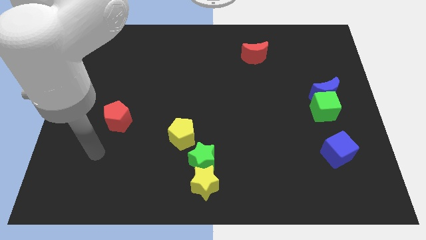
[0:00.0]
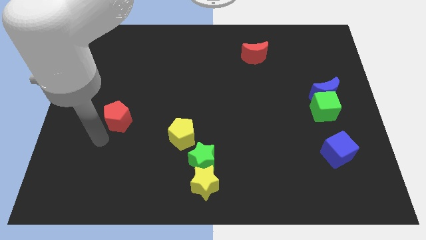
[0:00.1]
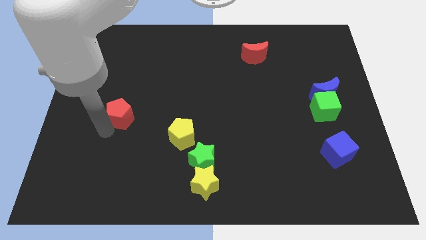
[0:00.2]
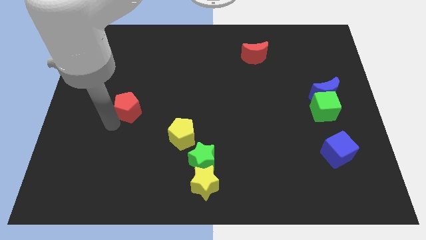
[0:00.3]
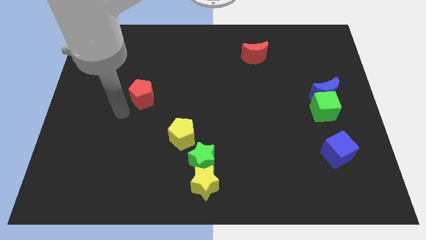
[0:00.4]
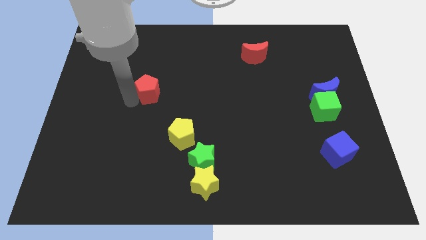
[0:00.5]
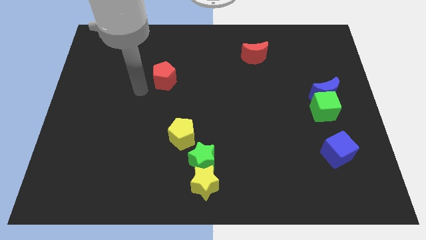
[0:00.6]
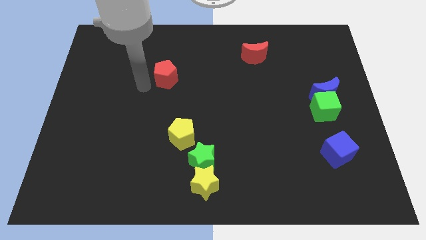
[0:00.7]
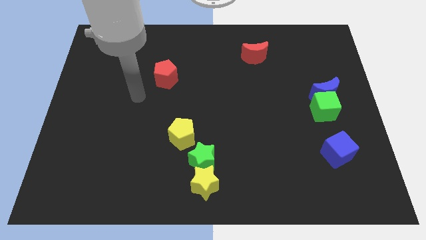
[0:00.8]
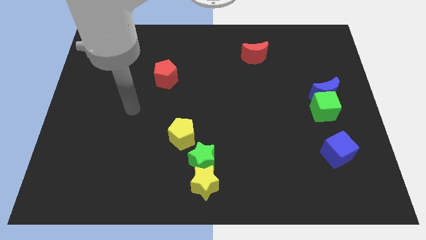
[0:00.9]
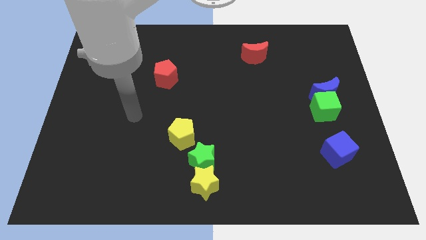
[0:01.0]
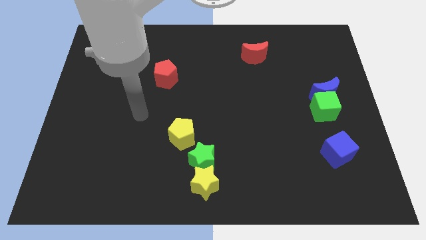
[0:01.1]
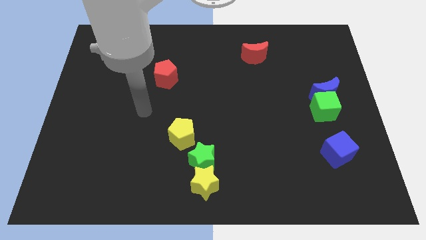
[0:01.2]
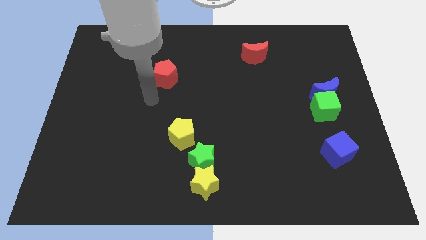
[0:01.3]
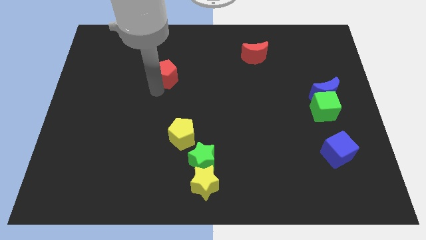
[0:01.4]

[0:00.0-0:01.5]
slide the red pentagon diagonally on the top left side of the yellow pentagon

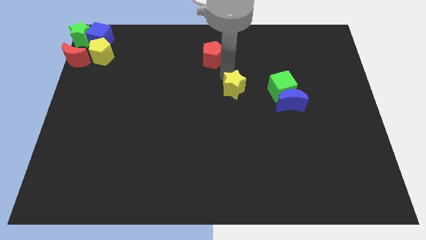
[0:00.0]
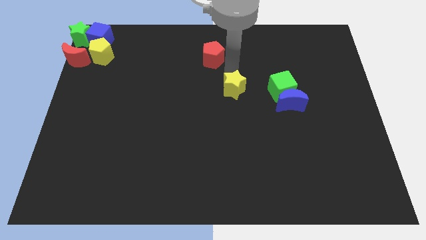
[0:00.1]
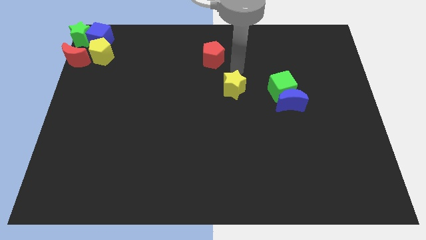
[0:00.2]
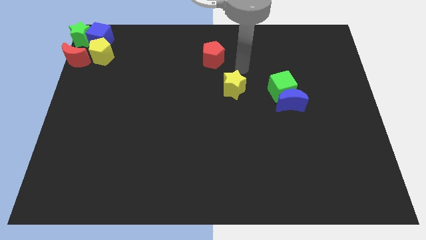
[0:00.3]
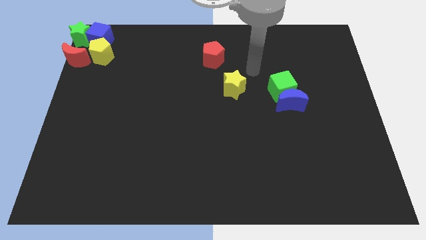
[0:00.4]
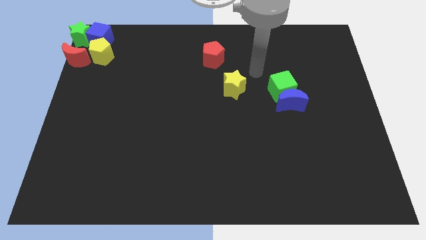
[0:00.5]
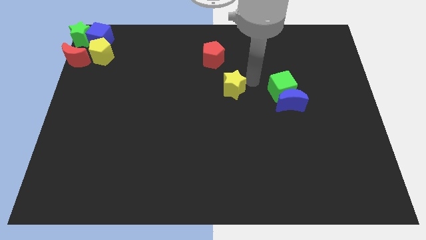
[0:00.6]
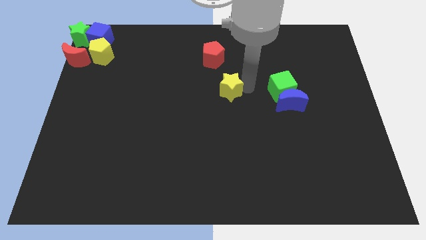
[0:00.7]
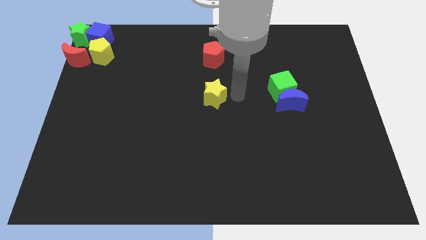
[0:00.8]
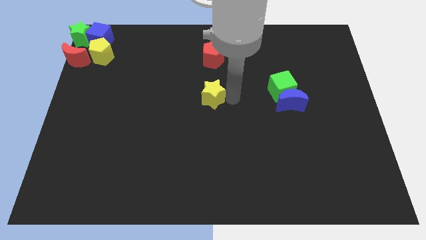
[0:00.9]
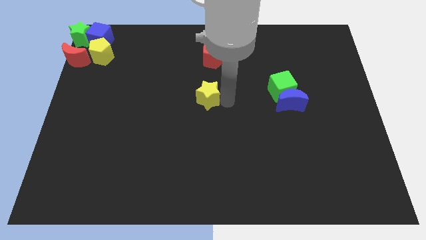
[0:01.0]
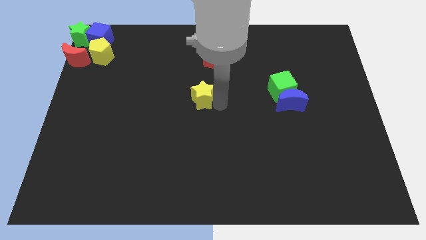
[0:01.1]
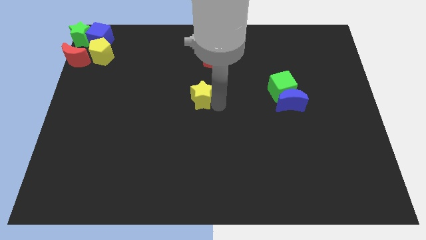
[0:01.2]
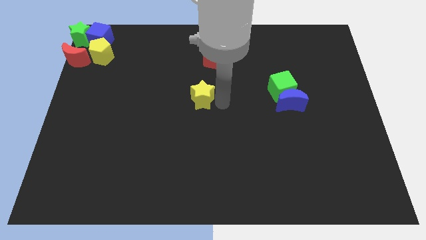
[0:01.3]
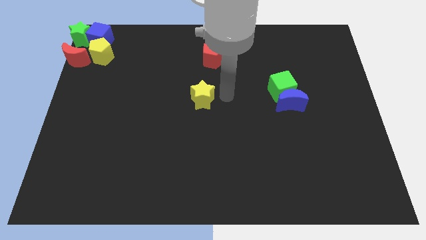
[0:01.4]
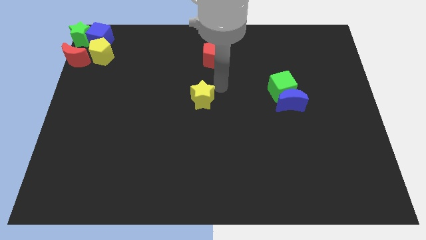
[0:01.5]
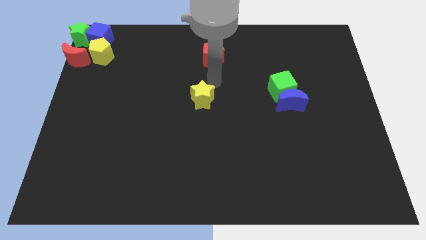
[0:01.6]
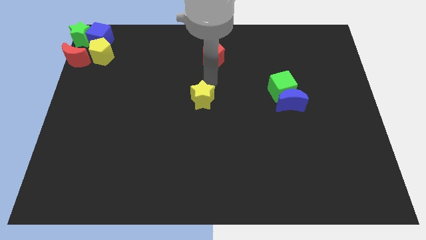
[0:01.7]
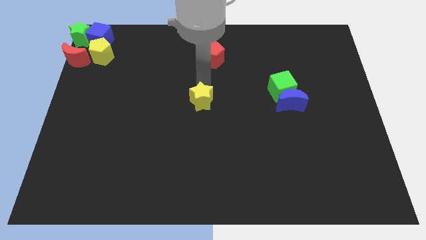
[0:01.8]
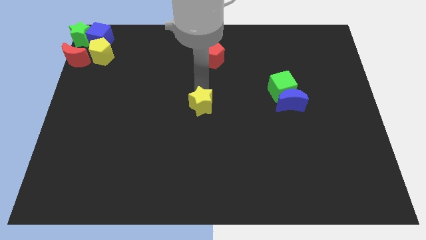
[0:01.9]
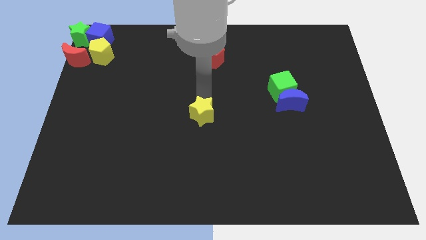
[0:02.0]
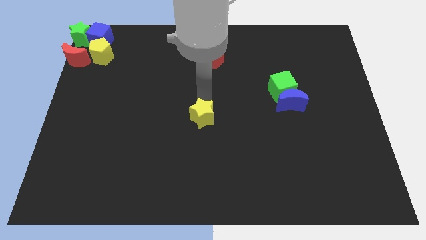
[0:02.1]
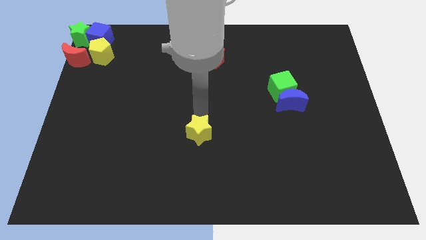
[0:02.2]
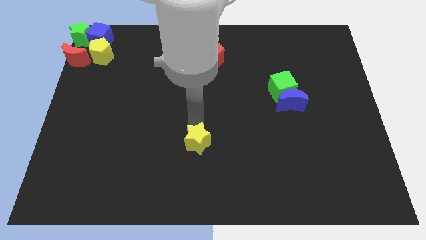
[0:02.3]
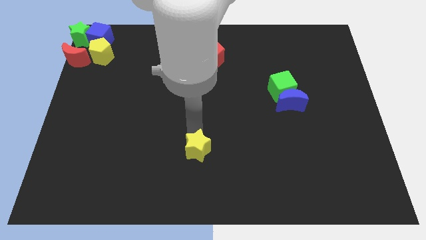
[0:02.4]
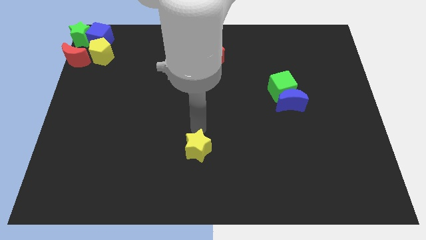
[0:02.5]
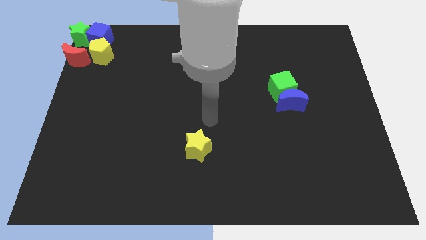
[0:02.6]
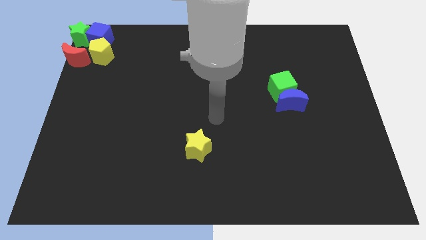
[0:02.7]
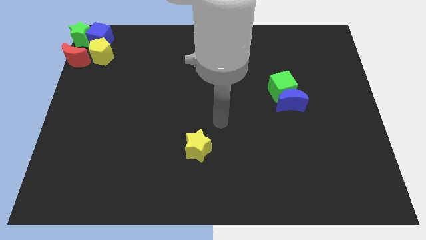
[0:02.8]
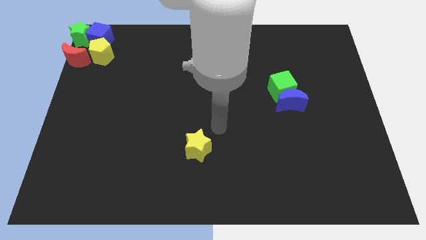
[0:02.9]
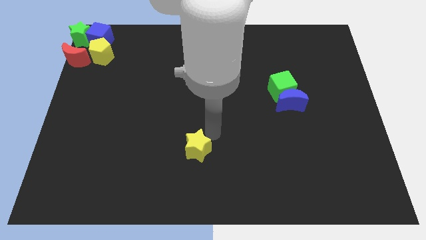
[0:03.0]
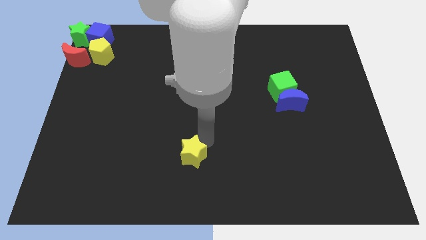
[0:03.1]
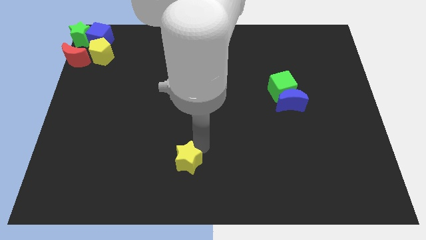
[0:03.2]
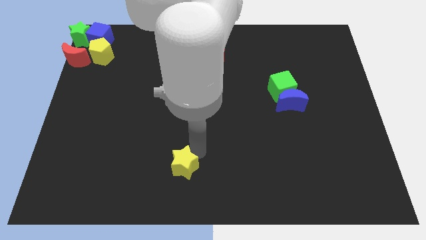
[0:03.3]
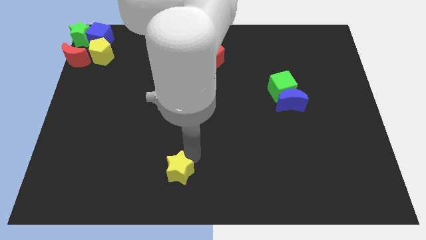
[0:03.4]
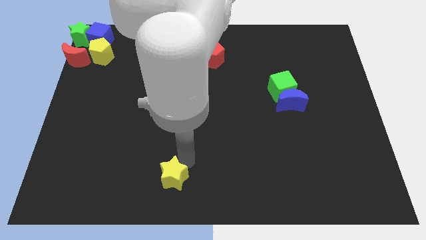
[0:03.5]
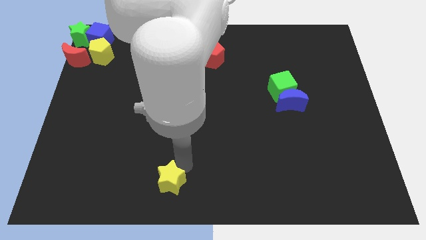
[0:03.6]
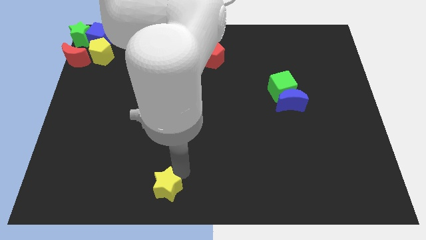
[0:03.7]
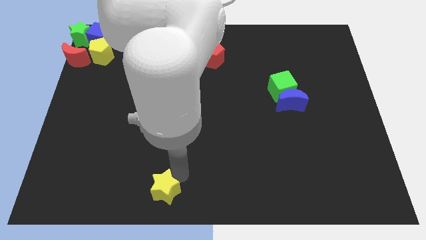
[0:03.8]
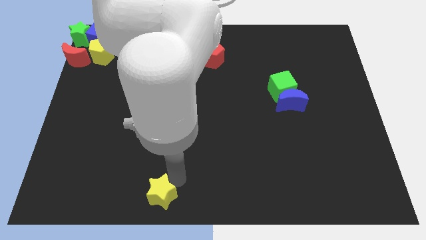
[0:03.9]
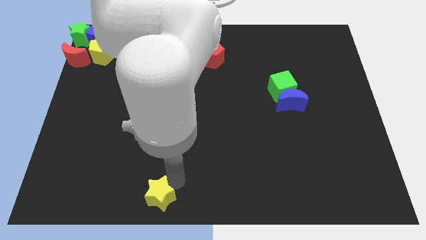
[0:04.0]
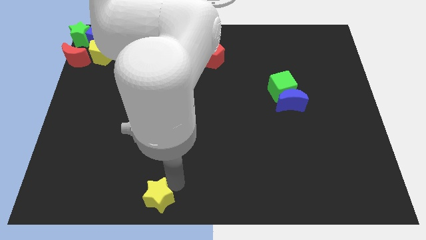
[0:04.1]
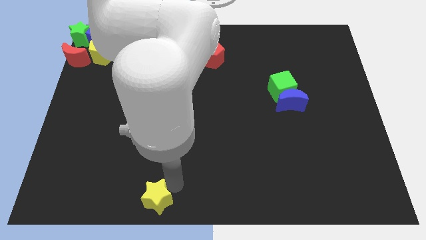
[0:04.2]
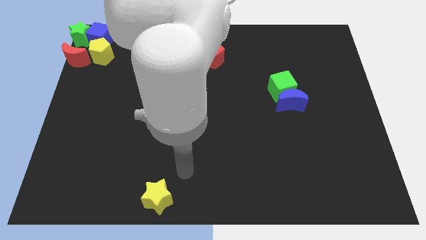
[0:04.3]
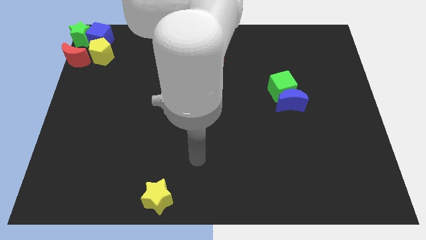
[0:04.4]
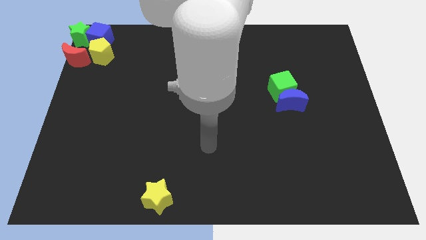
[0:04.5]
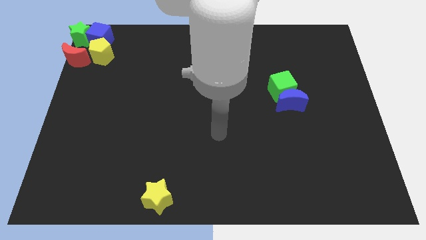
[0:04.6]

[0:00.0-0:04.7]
push the yellow star to the bottom of the board

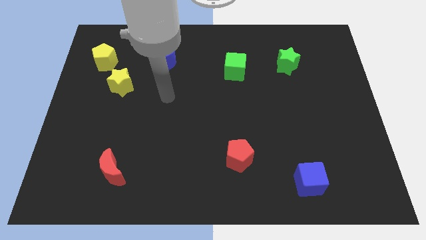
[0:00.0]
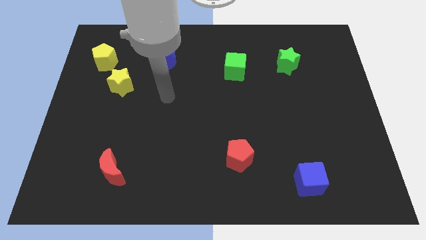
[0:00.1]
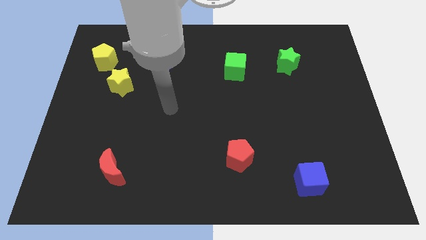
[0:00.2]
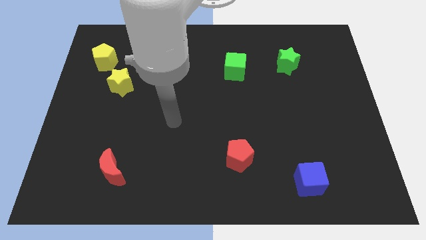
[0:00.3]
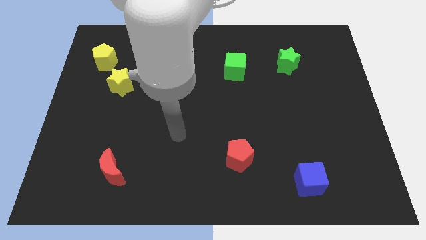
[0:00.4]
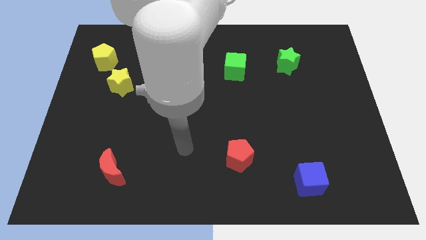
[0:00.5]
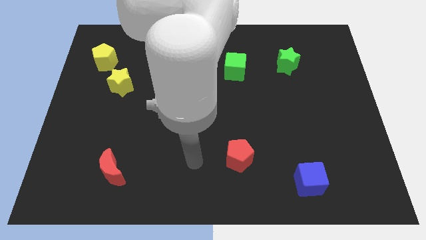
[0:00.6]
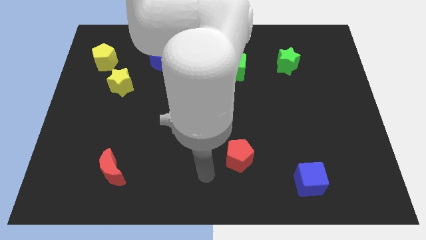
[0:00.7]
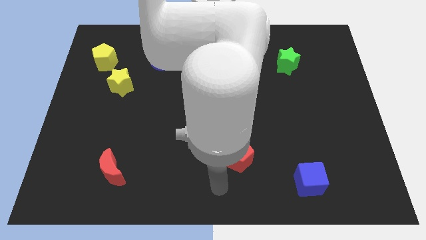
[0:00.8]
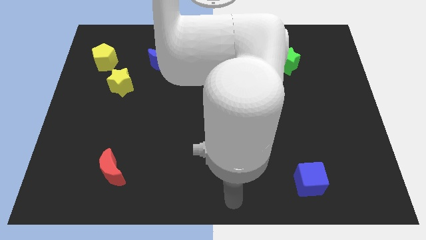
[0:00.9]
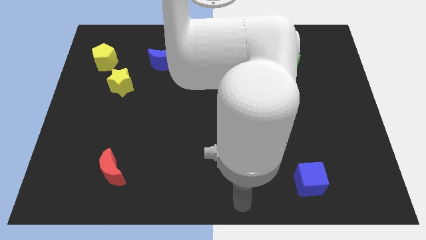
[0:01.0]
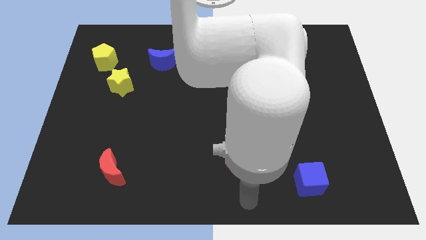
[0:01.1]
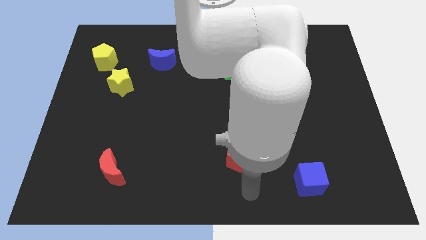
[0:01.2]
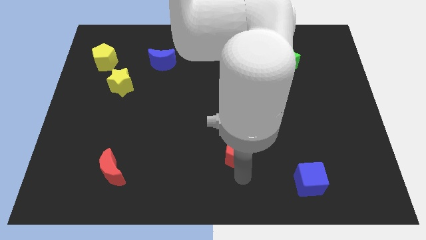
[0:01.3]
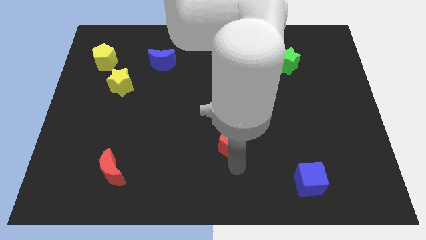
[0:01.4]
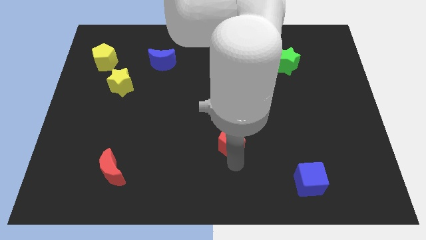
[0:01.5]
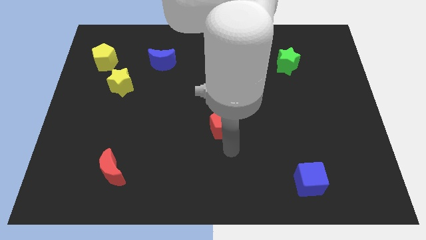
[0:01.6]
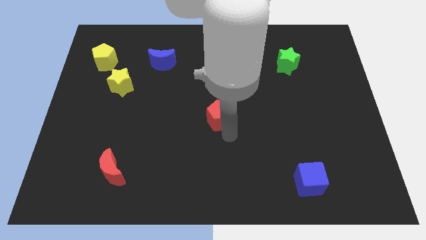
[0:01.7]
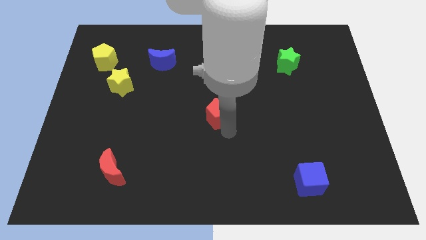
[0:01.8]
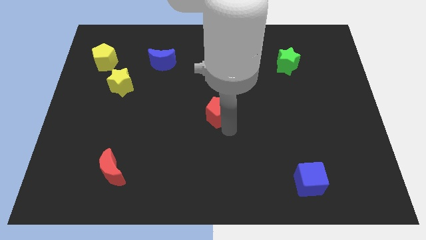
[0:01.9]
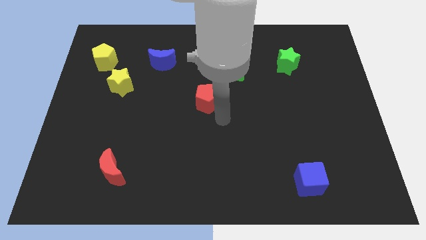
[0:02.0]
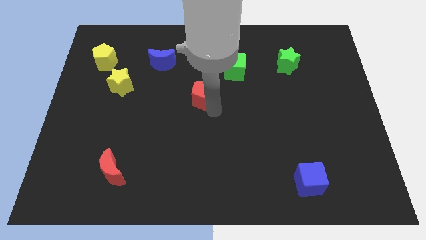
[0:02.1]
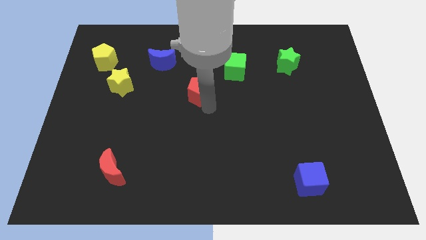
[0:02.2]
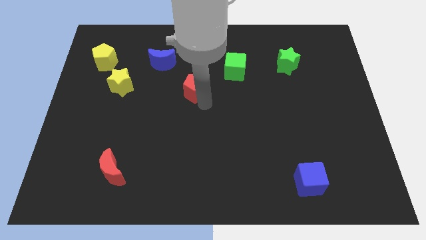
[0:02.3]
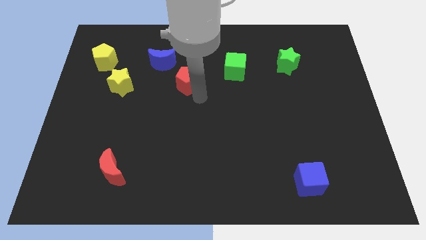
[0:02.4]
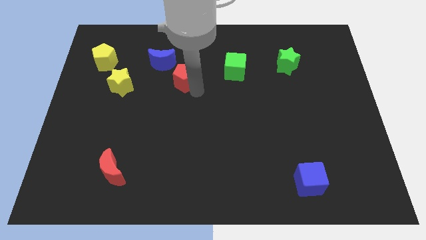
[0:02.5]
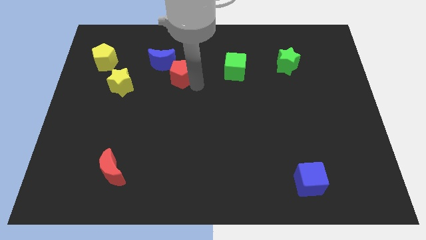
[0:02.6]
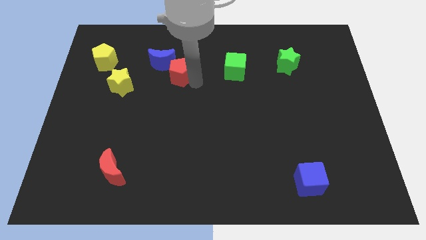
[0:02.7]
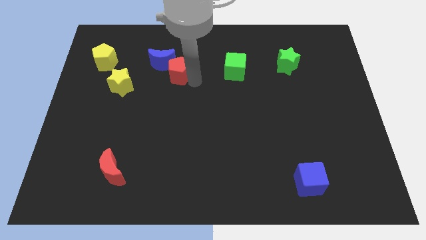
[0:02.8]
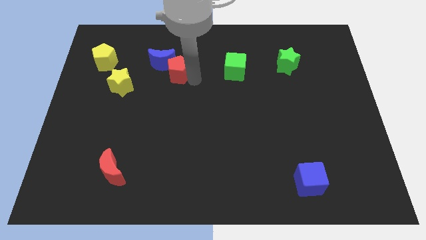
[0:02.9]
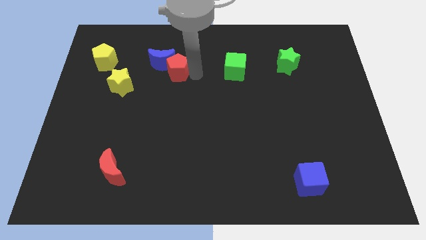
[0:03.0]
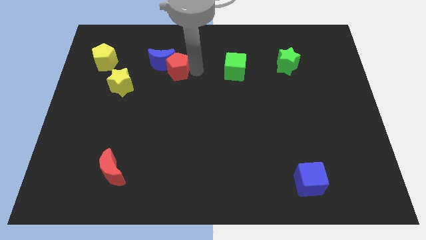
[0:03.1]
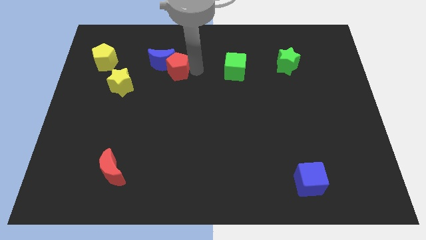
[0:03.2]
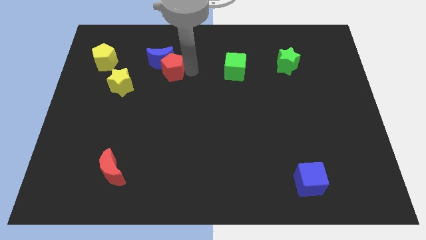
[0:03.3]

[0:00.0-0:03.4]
push the red pentagon into the blue crescent
